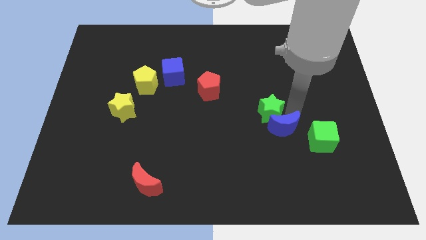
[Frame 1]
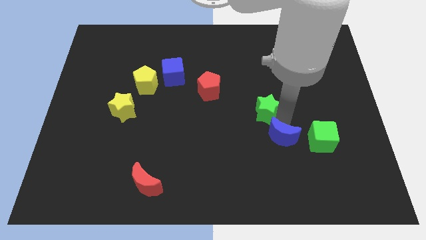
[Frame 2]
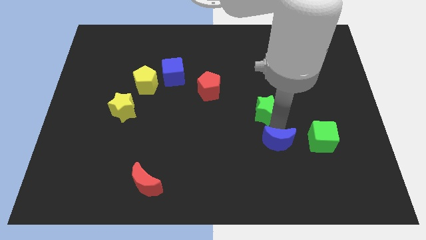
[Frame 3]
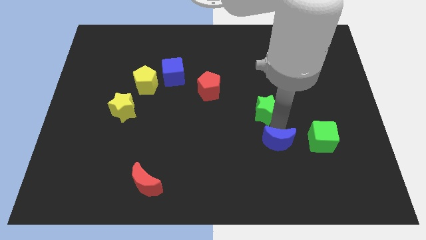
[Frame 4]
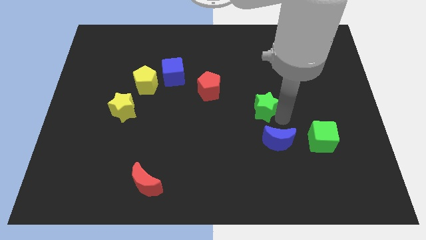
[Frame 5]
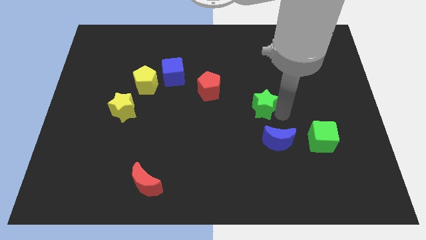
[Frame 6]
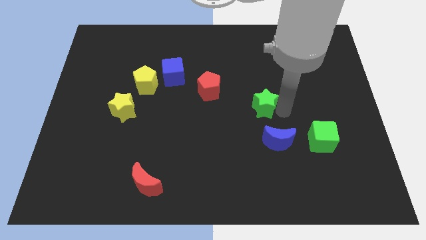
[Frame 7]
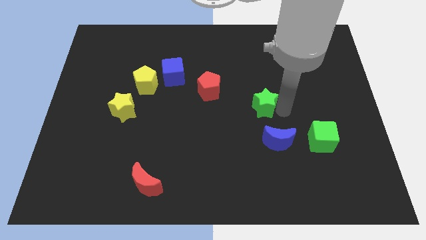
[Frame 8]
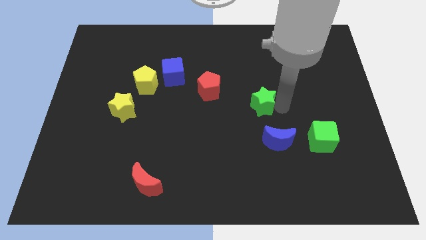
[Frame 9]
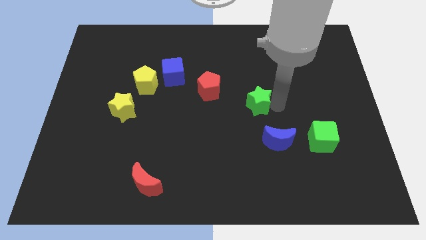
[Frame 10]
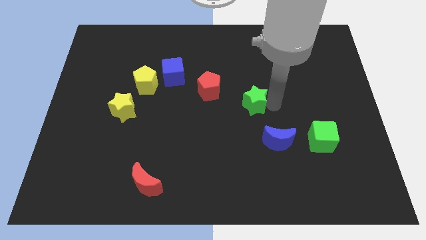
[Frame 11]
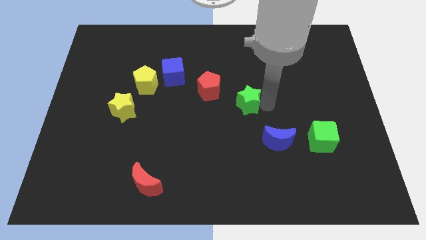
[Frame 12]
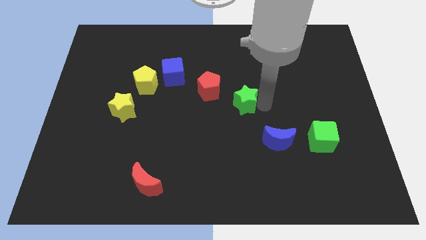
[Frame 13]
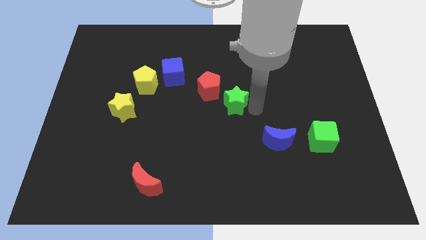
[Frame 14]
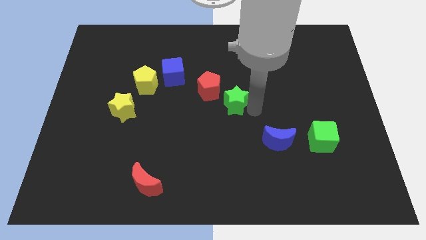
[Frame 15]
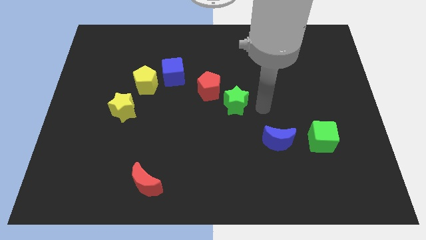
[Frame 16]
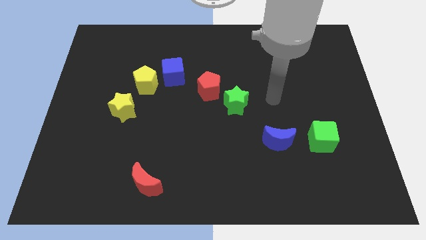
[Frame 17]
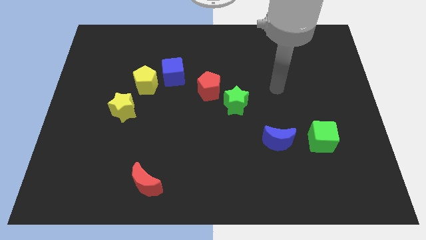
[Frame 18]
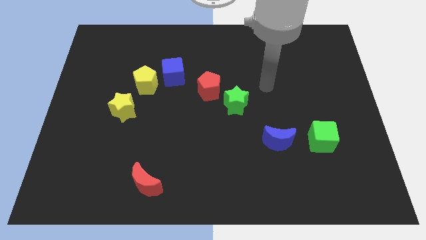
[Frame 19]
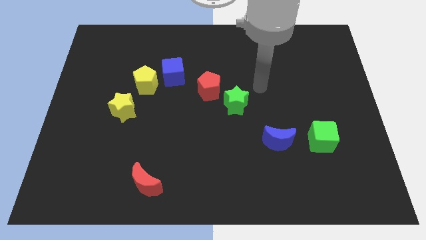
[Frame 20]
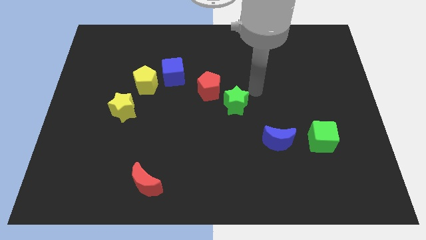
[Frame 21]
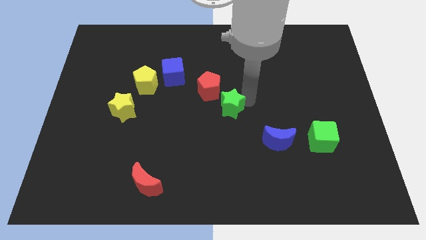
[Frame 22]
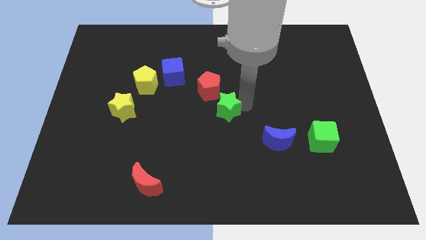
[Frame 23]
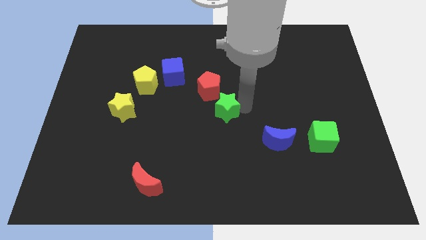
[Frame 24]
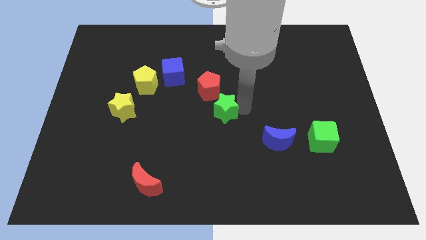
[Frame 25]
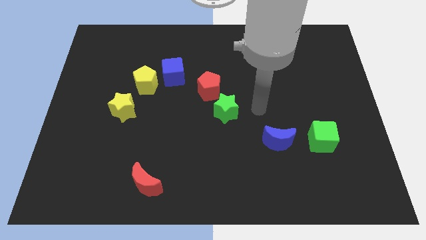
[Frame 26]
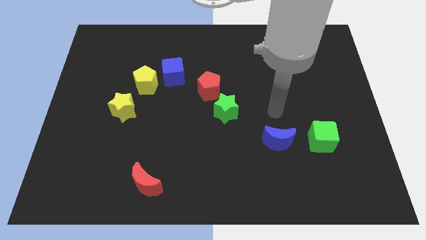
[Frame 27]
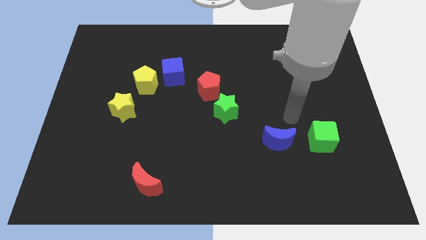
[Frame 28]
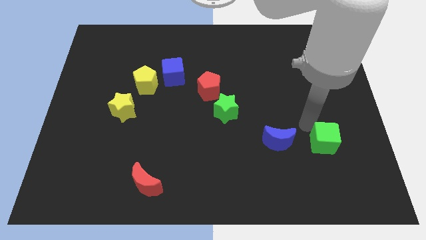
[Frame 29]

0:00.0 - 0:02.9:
move the green star to the bottom right of the red pentagon to the center of the board

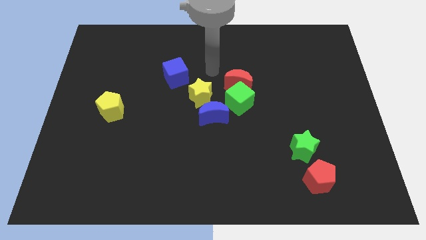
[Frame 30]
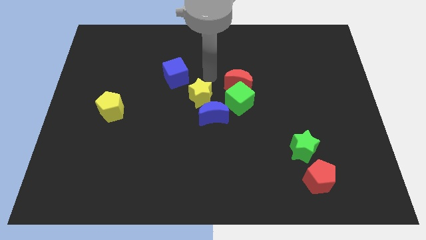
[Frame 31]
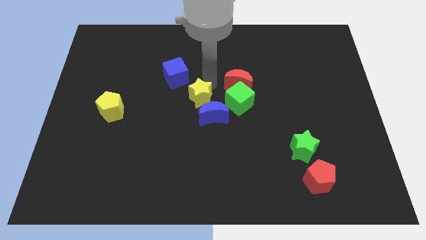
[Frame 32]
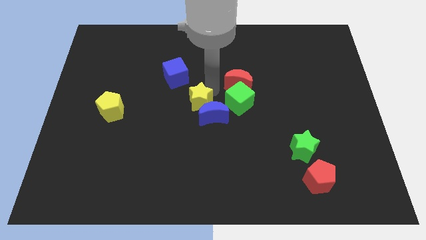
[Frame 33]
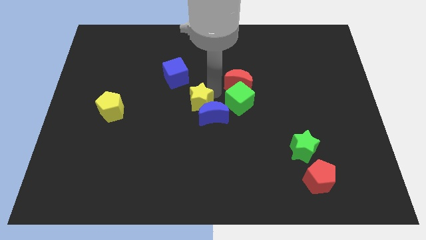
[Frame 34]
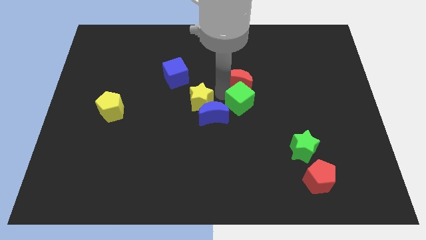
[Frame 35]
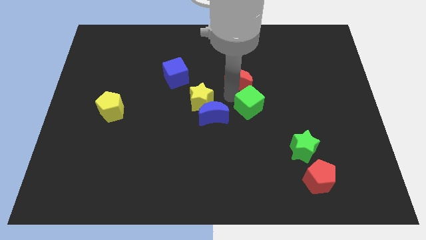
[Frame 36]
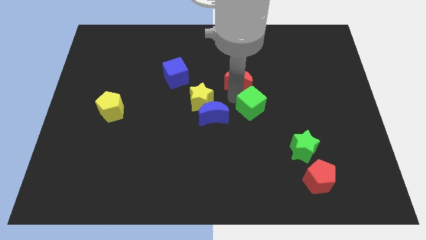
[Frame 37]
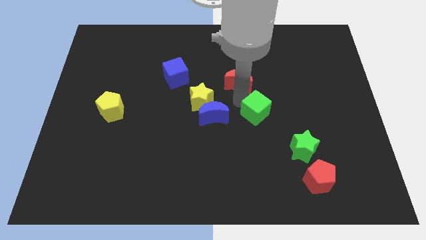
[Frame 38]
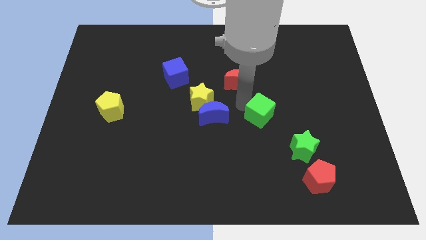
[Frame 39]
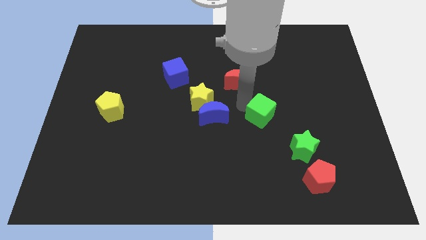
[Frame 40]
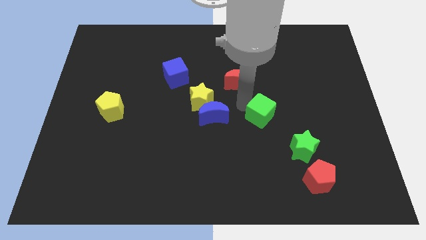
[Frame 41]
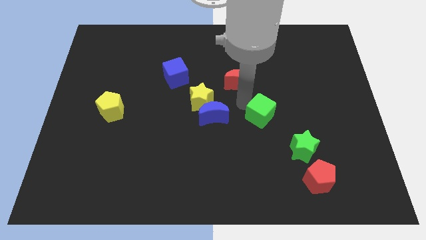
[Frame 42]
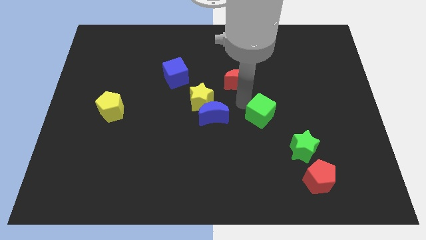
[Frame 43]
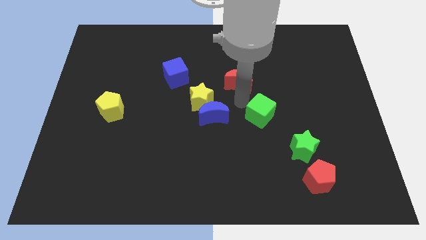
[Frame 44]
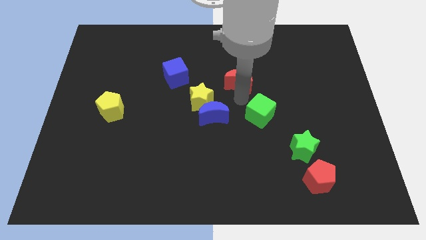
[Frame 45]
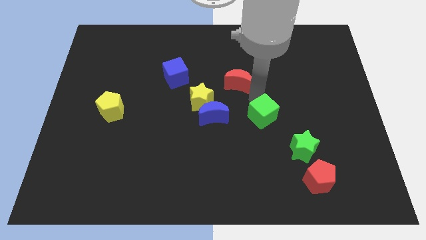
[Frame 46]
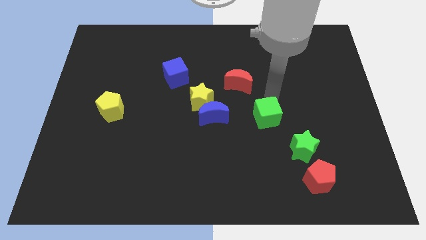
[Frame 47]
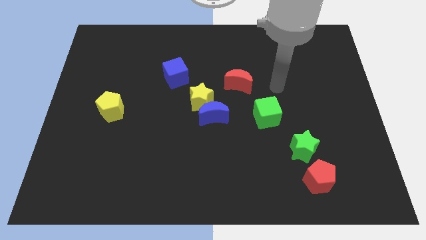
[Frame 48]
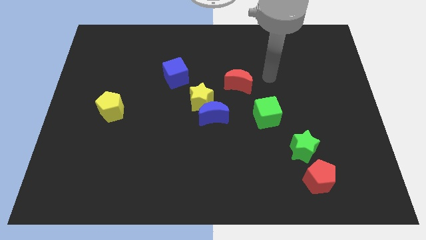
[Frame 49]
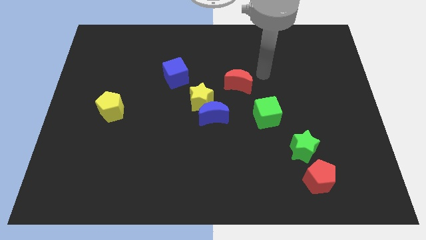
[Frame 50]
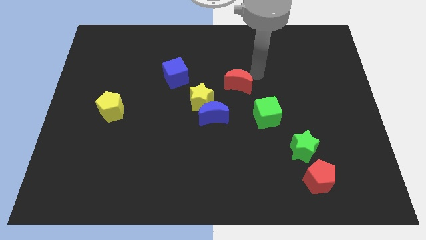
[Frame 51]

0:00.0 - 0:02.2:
place the green cube in between red crescent and green star

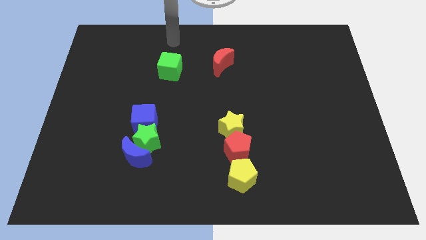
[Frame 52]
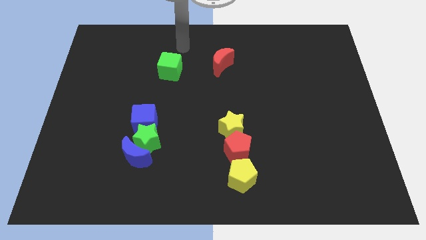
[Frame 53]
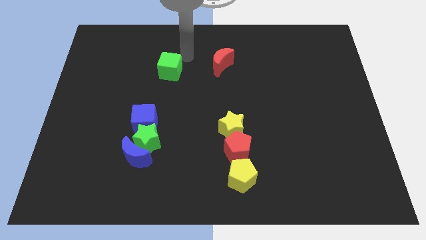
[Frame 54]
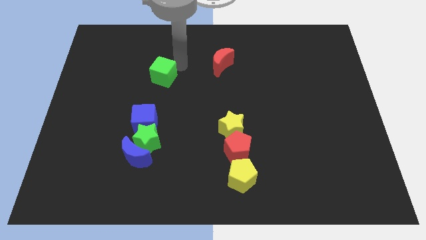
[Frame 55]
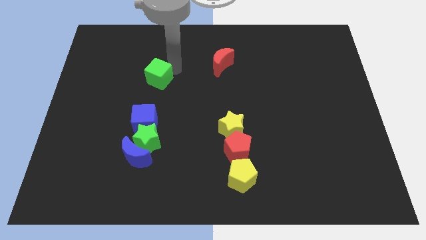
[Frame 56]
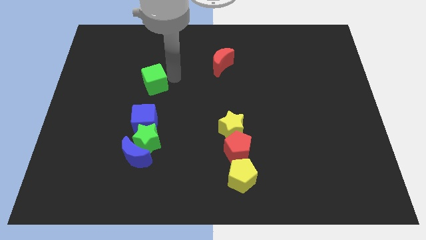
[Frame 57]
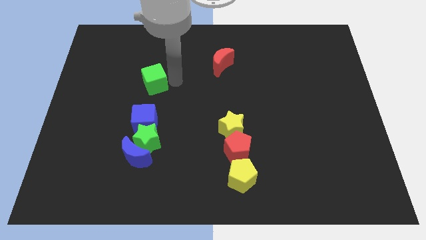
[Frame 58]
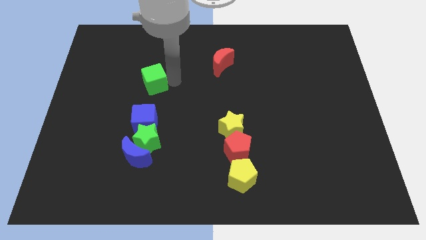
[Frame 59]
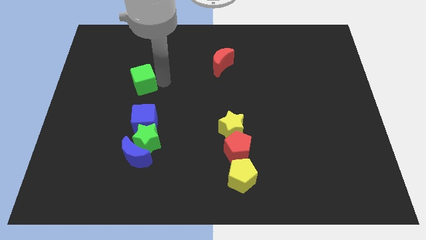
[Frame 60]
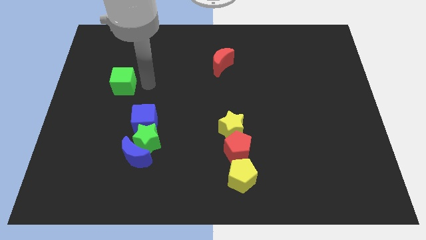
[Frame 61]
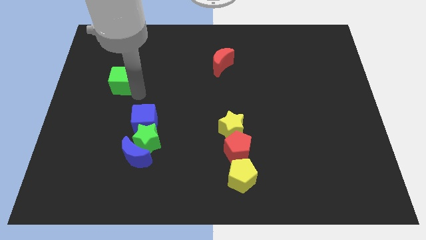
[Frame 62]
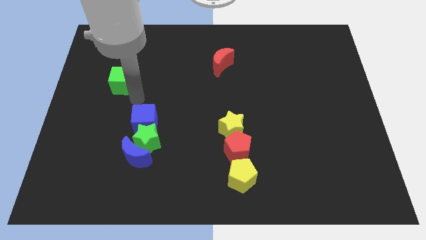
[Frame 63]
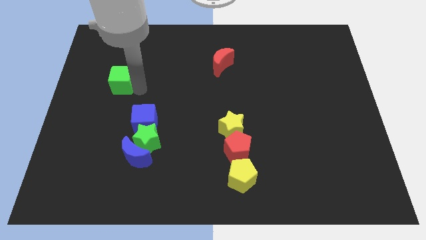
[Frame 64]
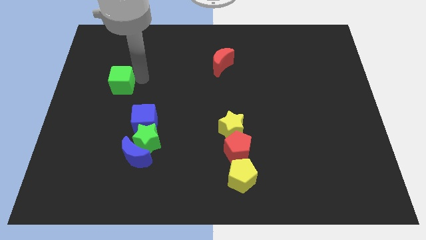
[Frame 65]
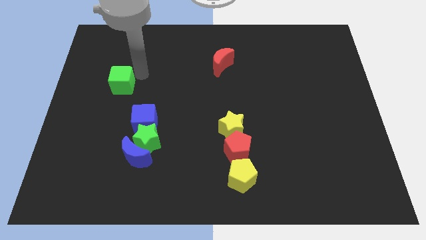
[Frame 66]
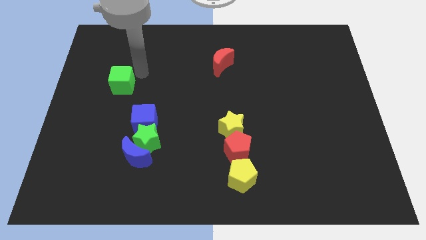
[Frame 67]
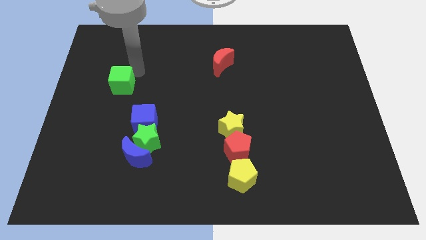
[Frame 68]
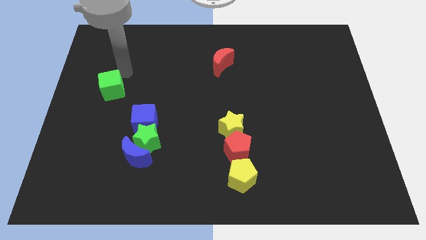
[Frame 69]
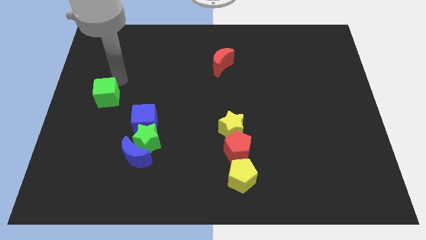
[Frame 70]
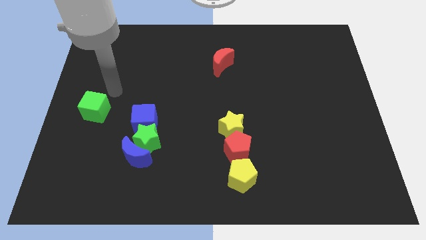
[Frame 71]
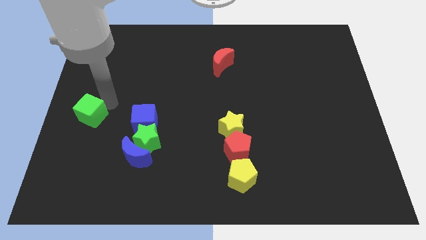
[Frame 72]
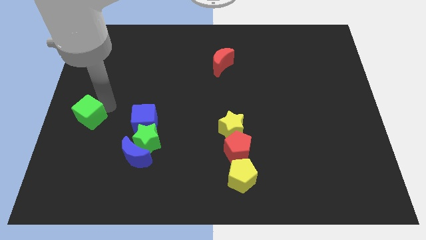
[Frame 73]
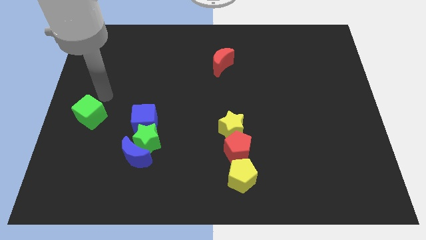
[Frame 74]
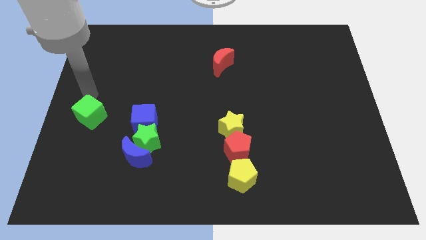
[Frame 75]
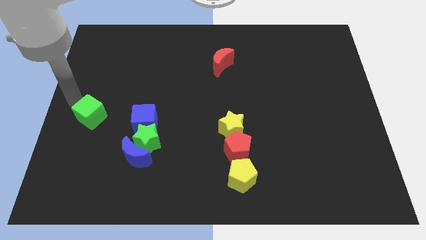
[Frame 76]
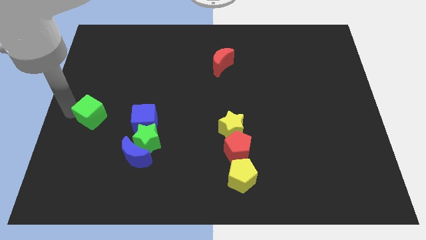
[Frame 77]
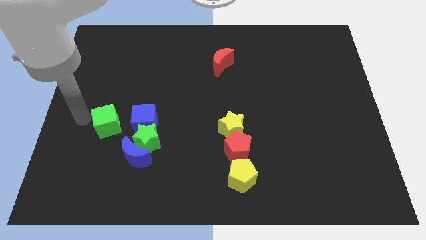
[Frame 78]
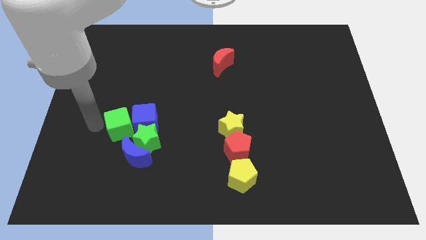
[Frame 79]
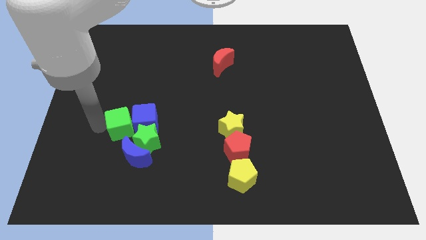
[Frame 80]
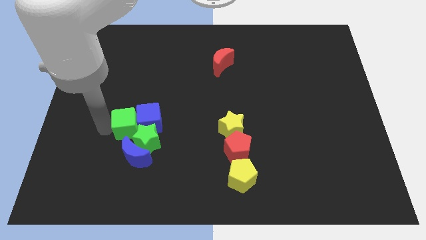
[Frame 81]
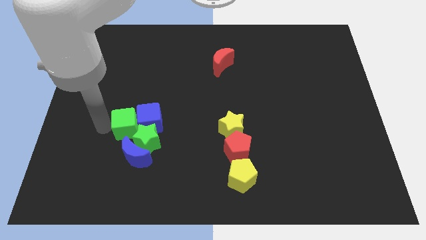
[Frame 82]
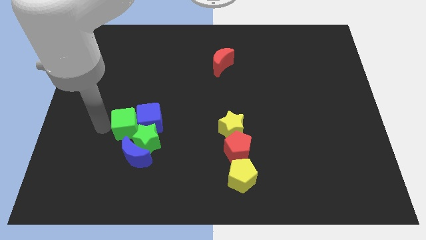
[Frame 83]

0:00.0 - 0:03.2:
move the green cube at the top left side of green star

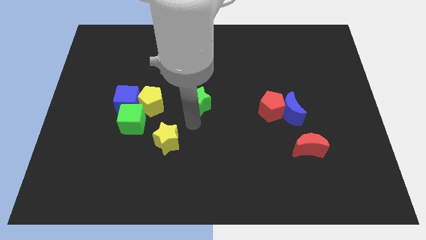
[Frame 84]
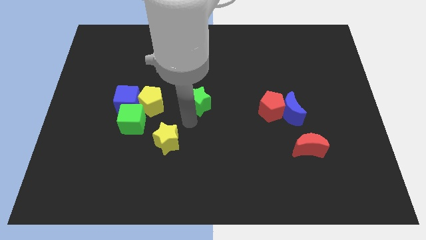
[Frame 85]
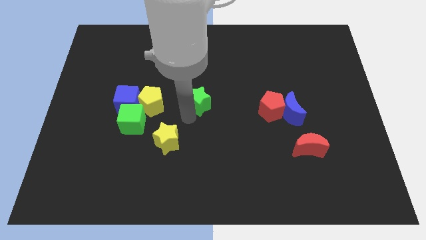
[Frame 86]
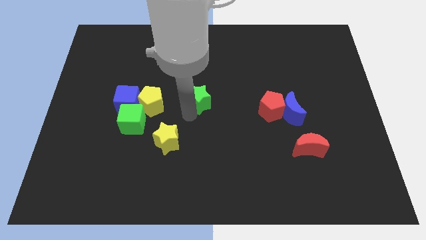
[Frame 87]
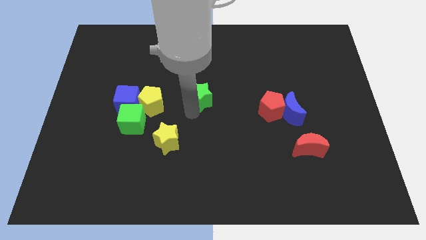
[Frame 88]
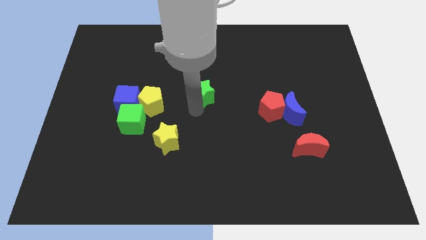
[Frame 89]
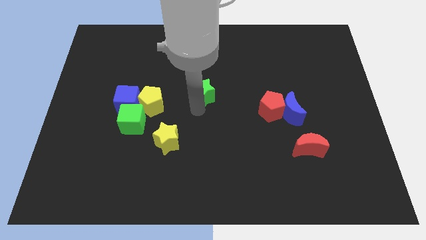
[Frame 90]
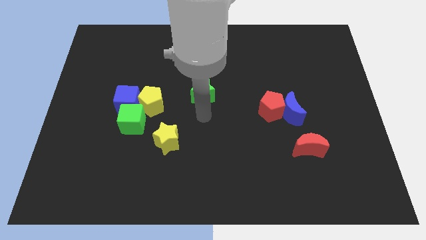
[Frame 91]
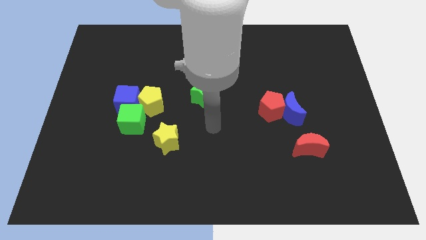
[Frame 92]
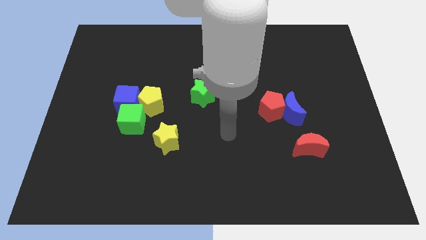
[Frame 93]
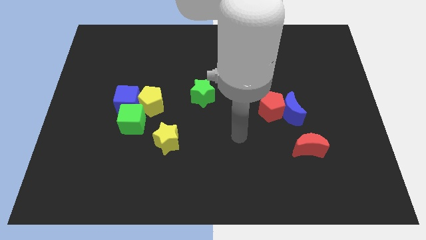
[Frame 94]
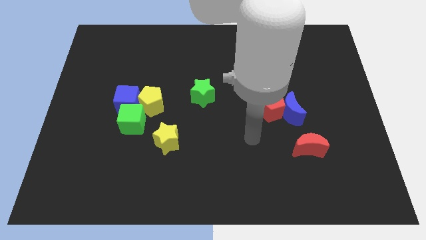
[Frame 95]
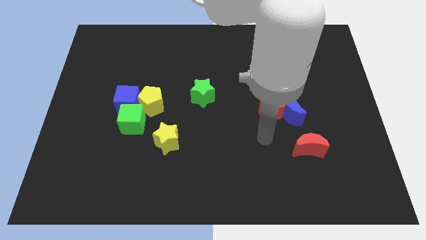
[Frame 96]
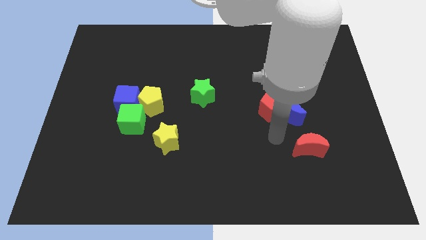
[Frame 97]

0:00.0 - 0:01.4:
slightly push the green star to the center of the board
